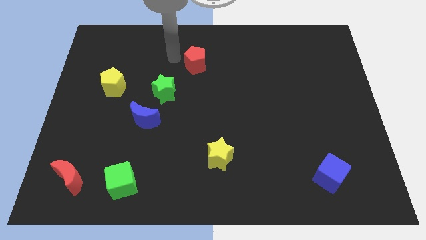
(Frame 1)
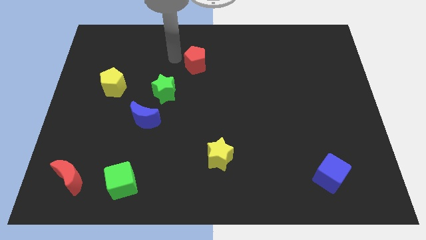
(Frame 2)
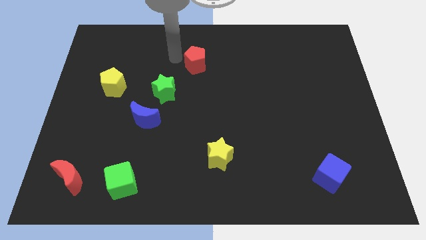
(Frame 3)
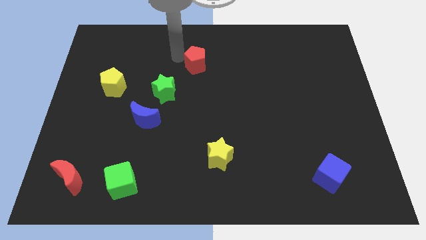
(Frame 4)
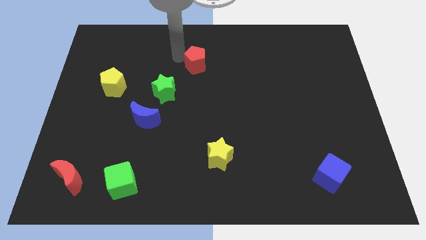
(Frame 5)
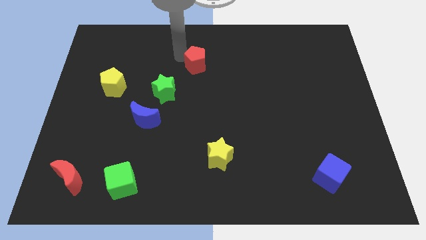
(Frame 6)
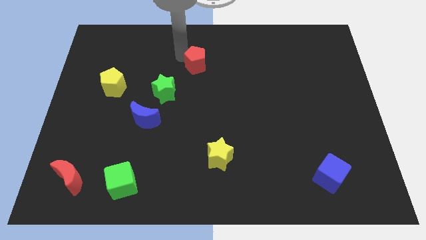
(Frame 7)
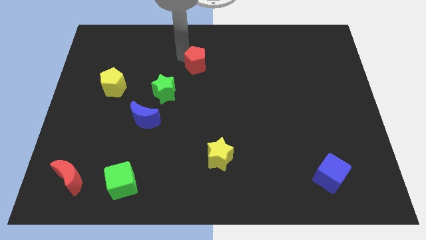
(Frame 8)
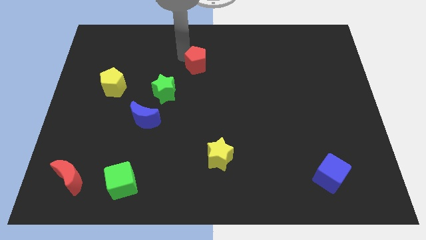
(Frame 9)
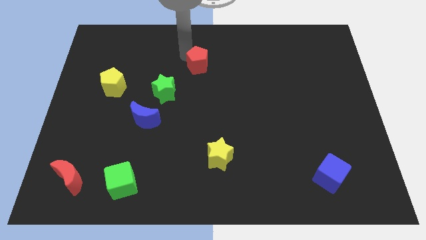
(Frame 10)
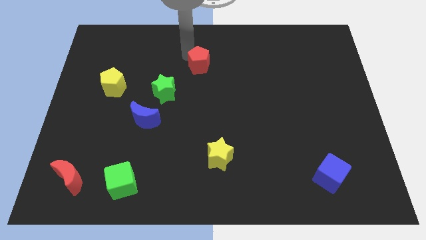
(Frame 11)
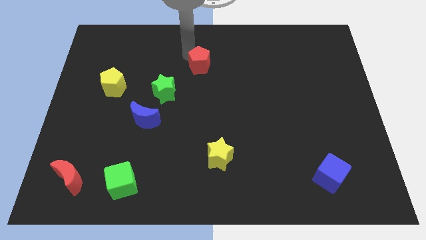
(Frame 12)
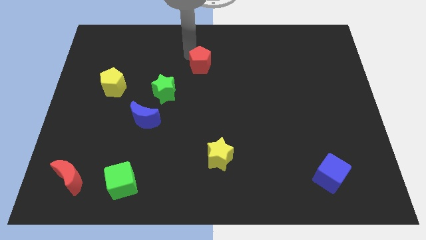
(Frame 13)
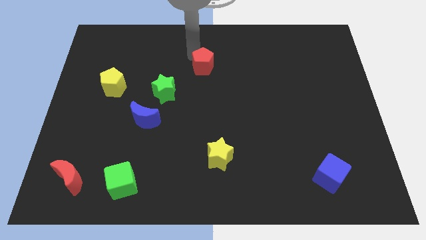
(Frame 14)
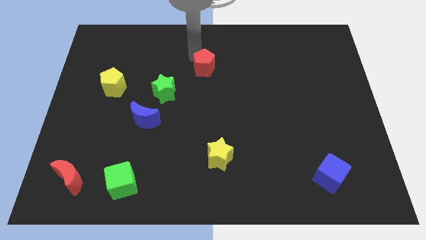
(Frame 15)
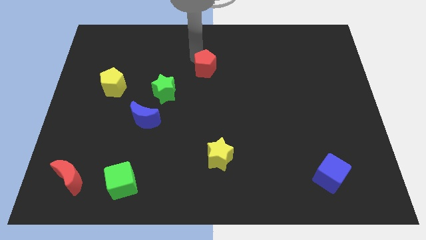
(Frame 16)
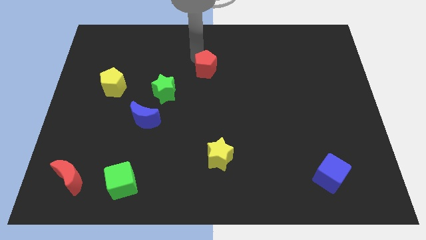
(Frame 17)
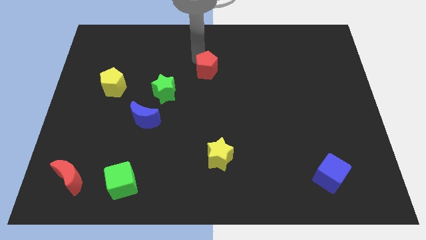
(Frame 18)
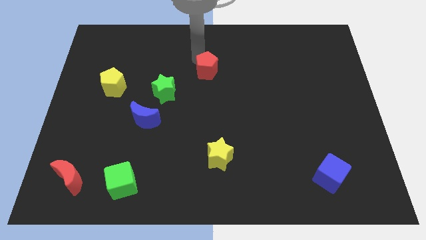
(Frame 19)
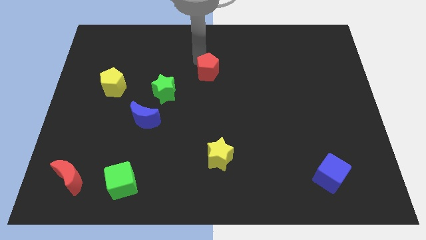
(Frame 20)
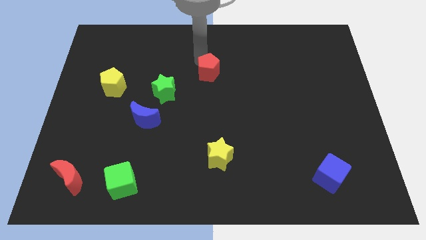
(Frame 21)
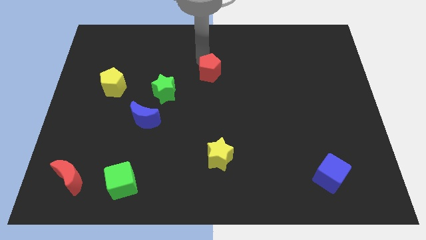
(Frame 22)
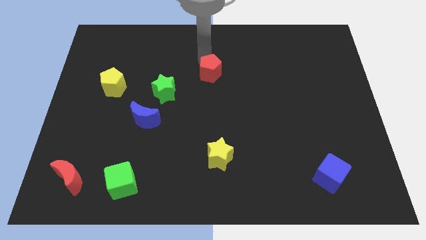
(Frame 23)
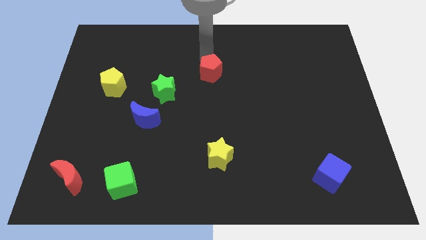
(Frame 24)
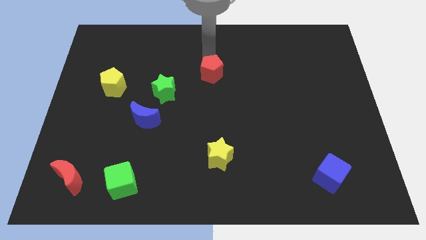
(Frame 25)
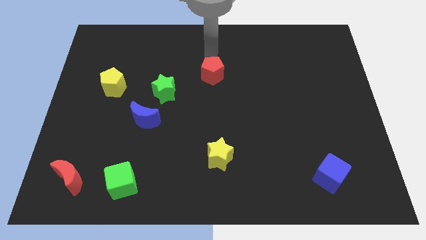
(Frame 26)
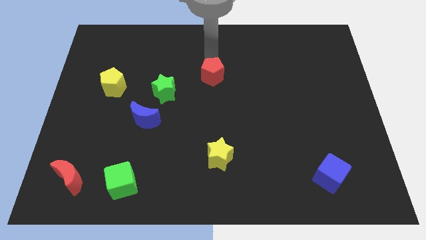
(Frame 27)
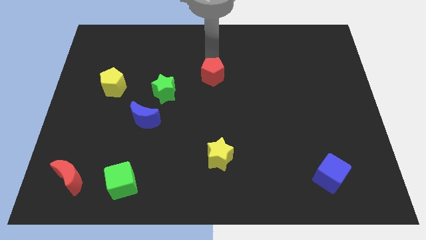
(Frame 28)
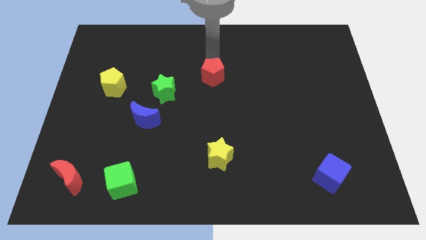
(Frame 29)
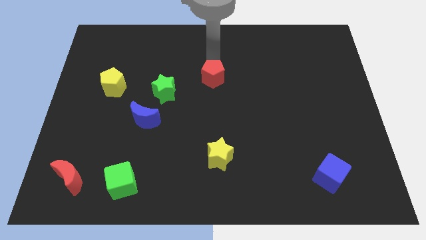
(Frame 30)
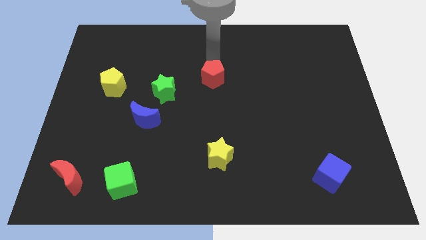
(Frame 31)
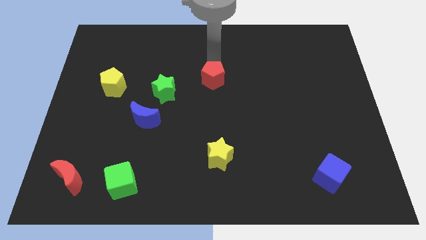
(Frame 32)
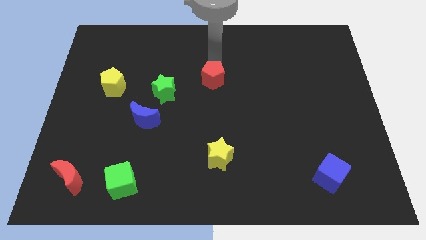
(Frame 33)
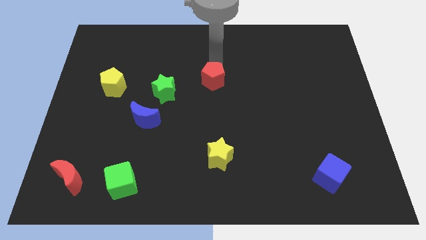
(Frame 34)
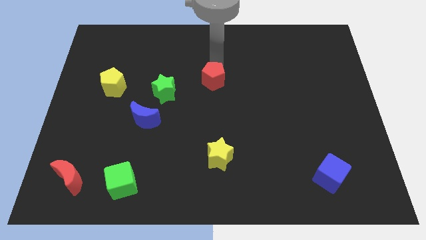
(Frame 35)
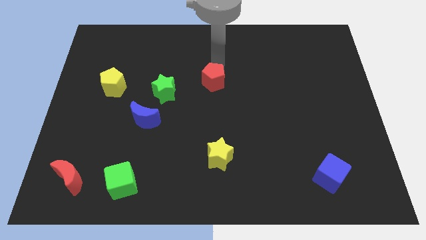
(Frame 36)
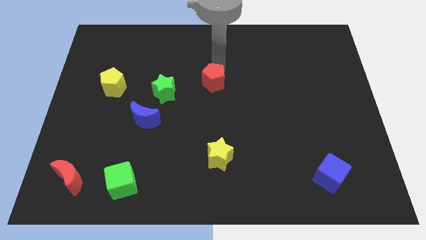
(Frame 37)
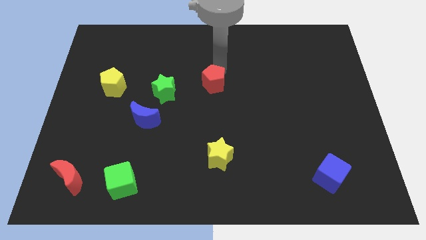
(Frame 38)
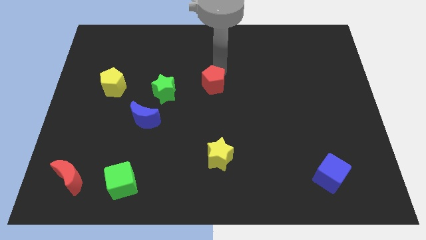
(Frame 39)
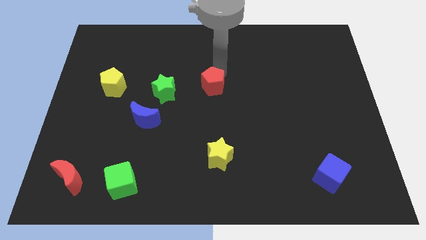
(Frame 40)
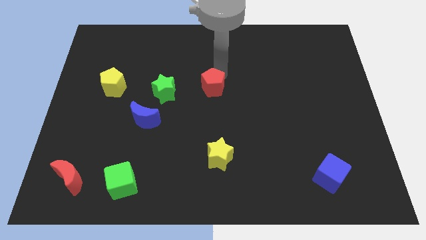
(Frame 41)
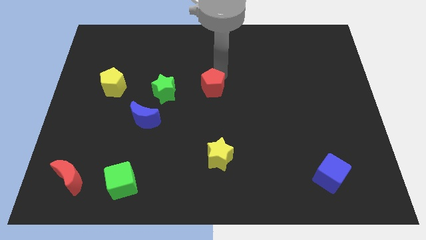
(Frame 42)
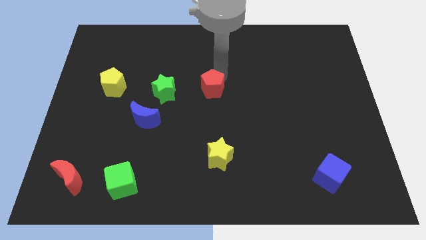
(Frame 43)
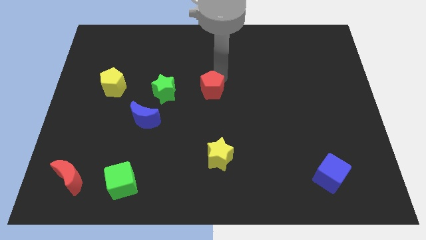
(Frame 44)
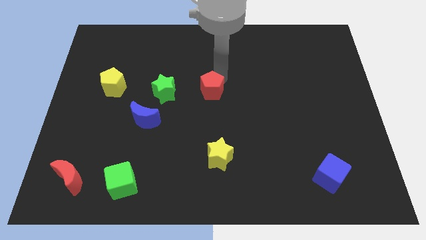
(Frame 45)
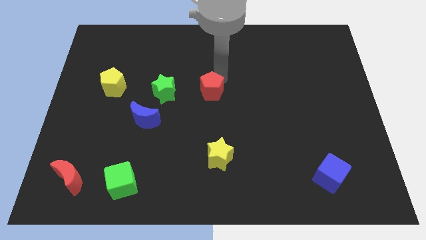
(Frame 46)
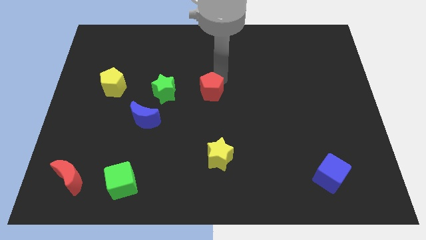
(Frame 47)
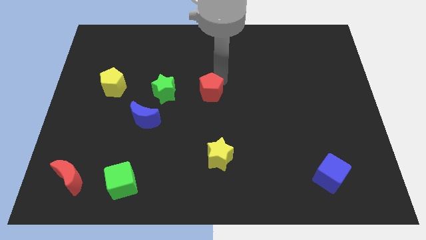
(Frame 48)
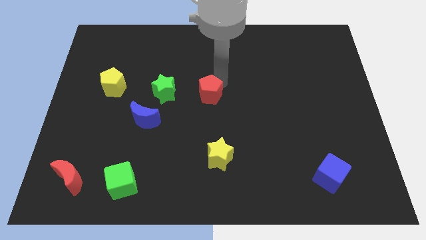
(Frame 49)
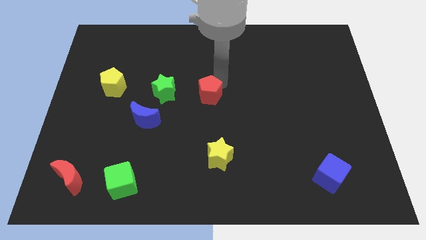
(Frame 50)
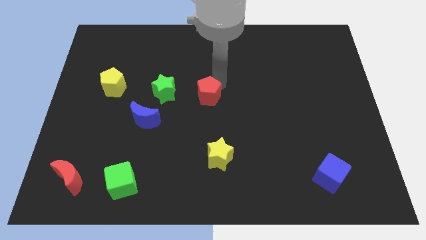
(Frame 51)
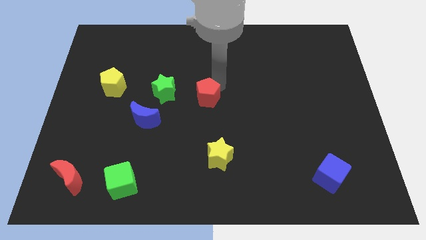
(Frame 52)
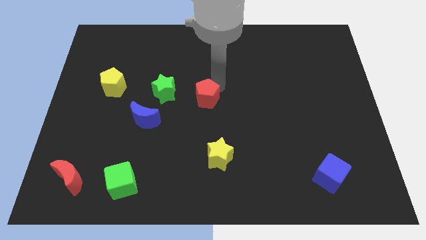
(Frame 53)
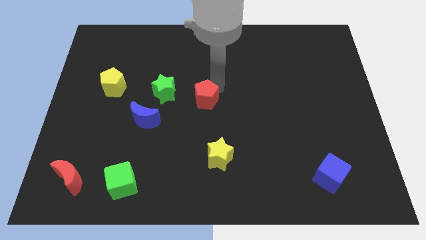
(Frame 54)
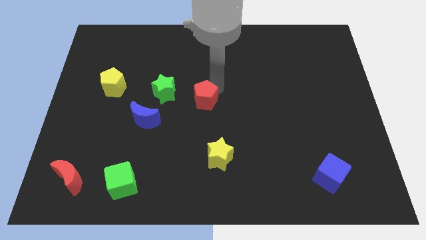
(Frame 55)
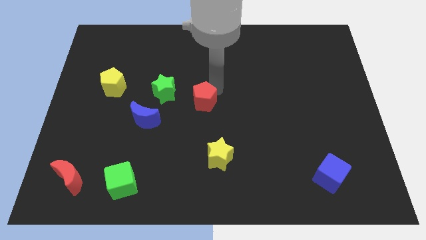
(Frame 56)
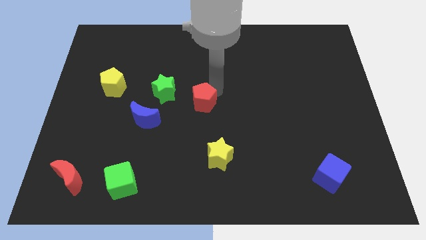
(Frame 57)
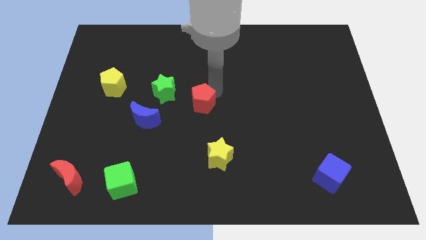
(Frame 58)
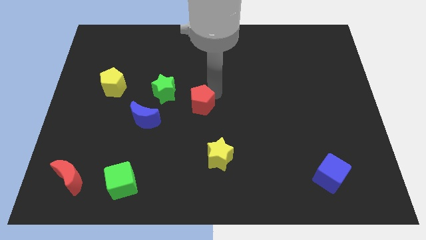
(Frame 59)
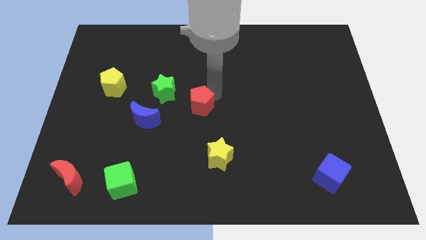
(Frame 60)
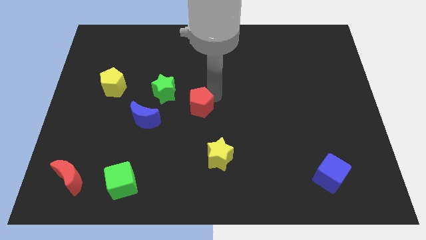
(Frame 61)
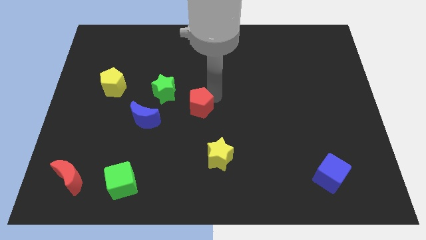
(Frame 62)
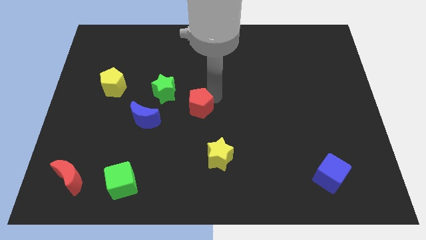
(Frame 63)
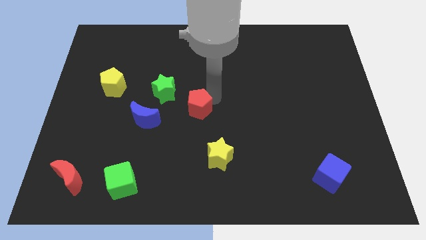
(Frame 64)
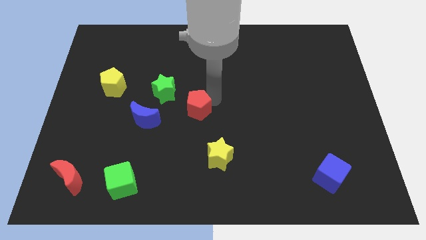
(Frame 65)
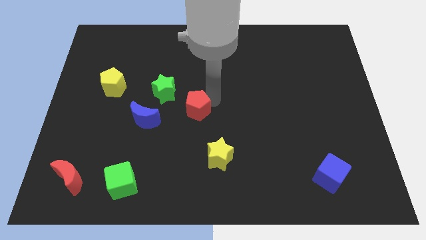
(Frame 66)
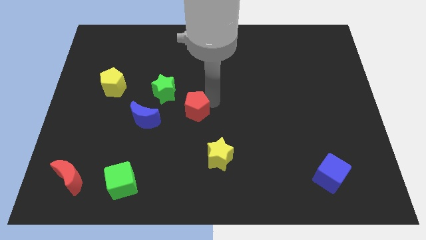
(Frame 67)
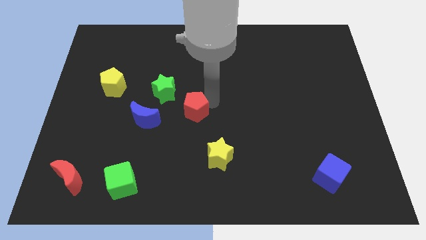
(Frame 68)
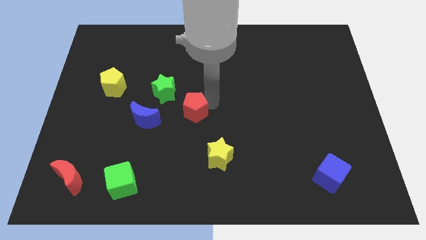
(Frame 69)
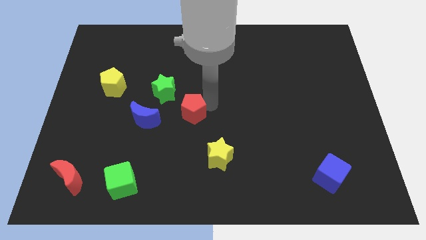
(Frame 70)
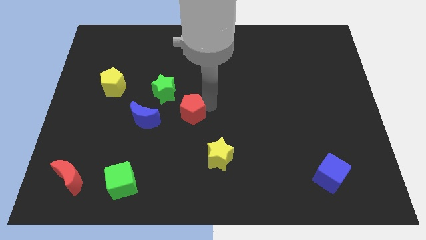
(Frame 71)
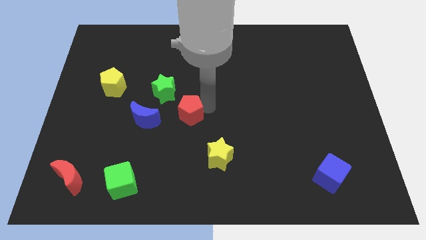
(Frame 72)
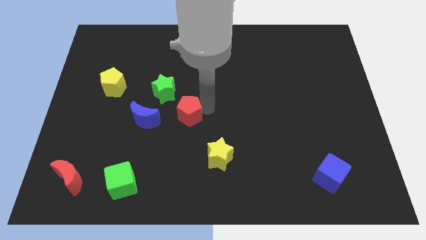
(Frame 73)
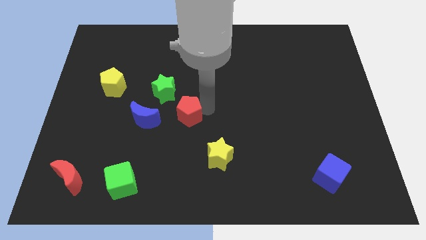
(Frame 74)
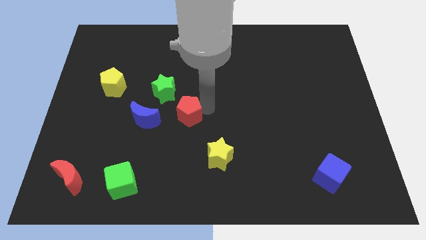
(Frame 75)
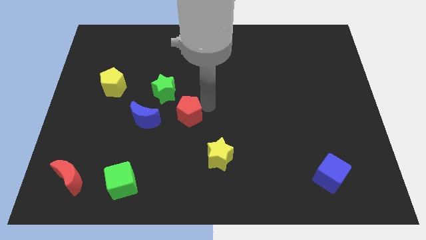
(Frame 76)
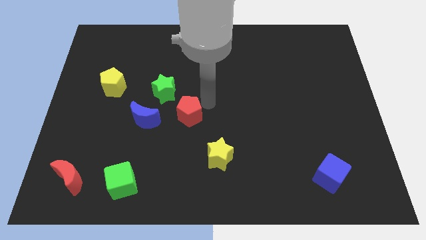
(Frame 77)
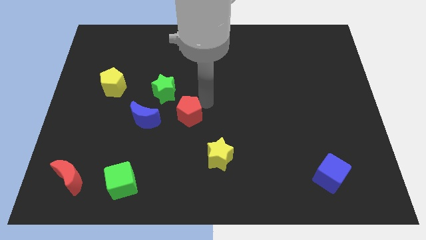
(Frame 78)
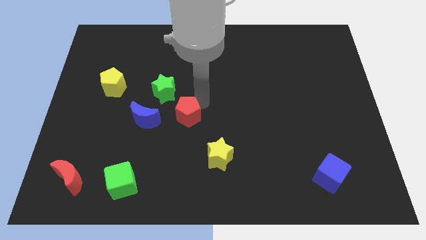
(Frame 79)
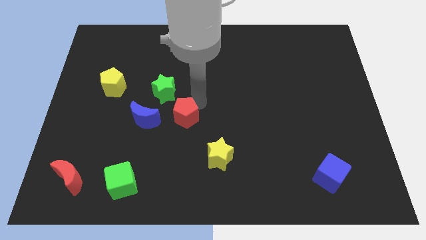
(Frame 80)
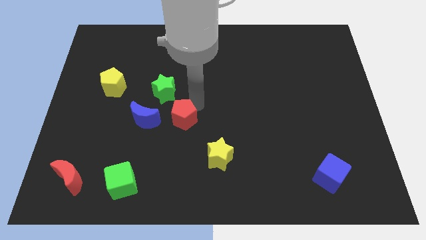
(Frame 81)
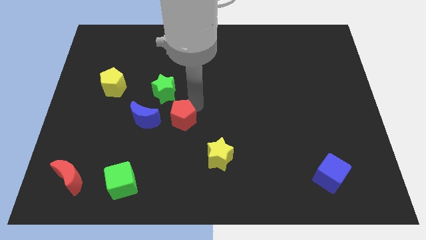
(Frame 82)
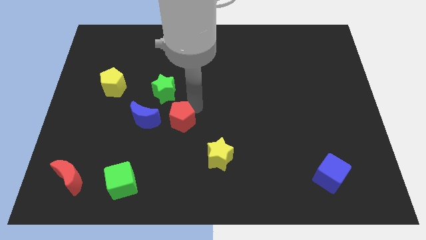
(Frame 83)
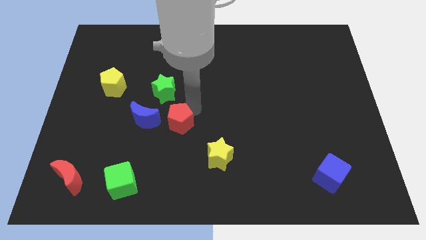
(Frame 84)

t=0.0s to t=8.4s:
move the red pentagon to the right side of the blue moon

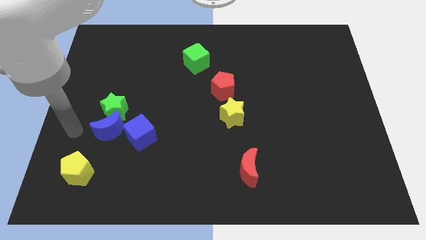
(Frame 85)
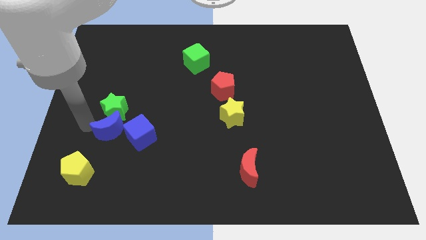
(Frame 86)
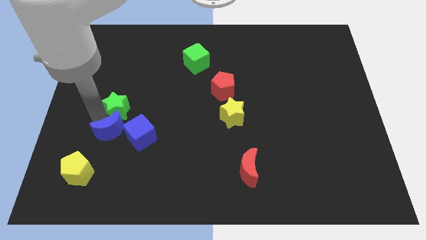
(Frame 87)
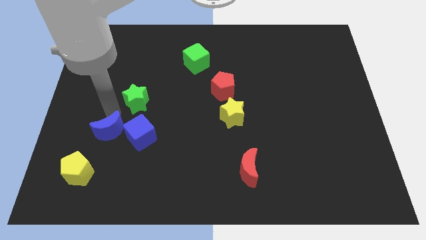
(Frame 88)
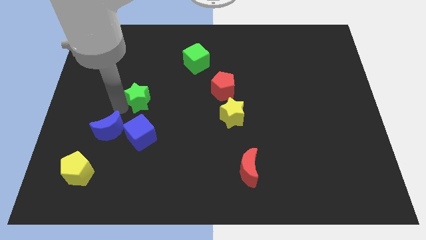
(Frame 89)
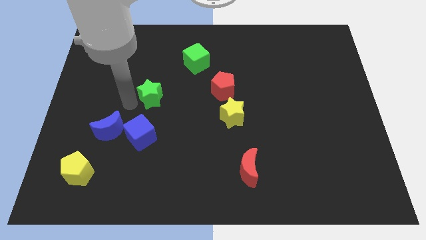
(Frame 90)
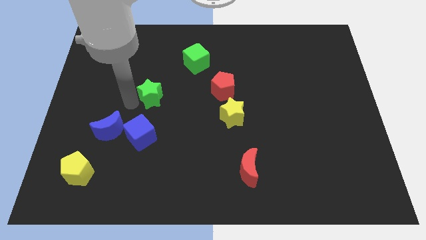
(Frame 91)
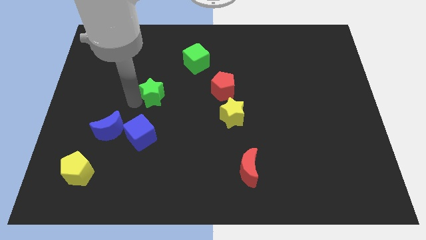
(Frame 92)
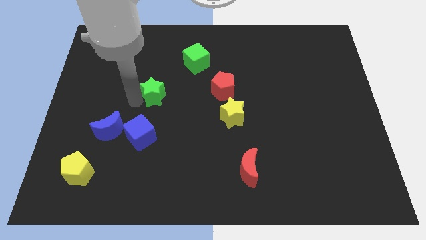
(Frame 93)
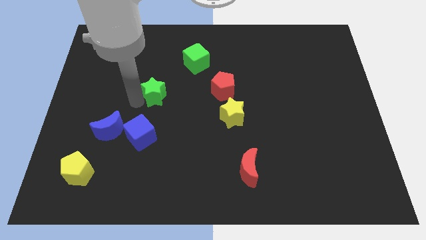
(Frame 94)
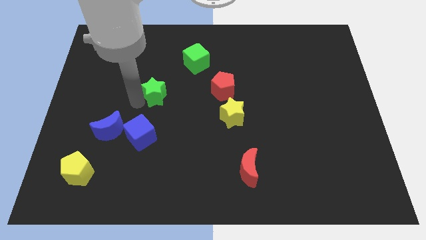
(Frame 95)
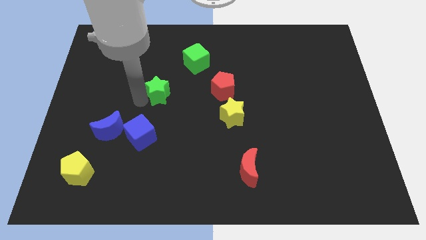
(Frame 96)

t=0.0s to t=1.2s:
place green star above the blue cube
